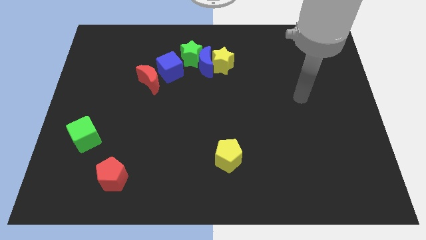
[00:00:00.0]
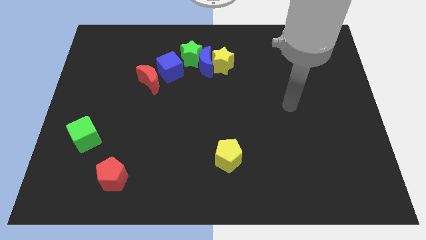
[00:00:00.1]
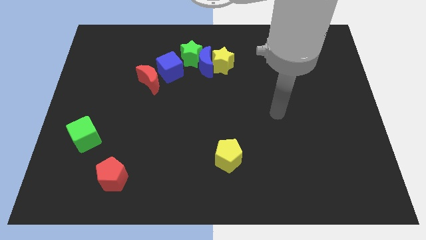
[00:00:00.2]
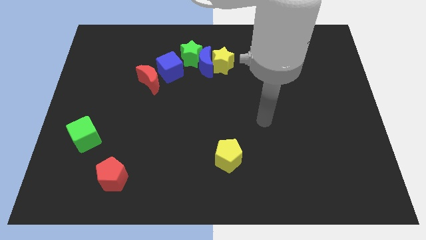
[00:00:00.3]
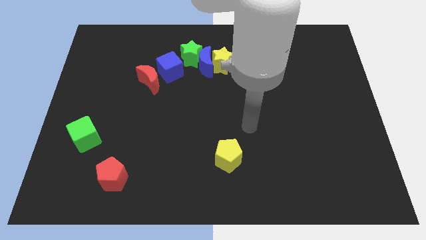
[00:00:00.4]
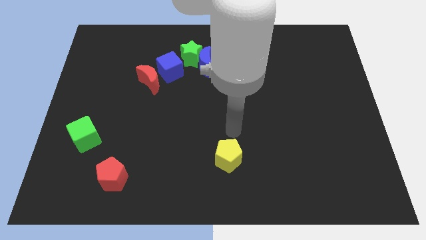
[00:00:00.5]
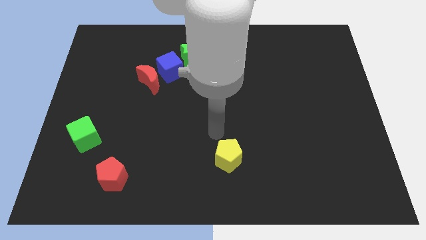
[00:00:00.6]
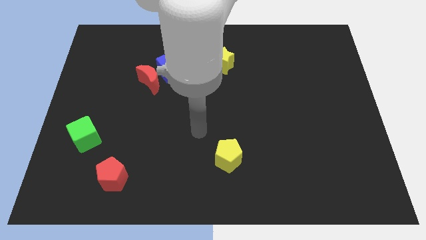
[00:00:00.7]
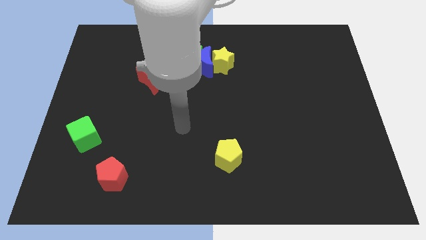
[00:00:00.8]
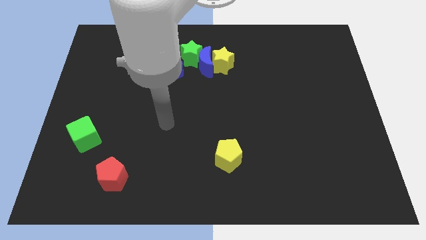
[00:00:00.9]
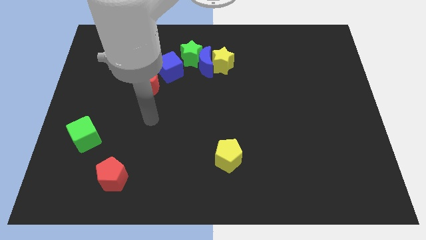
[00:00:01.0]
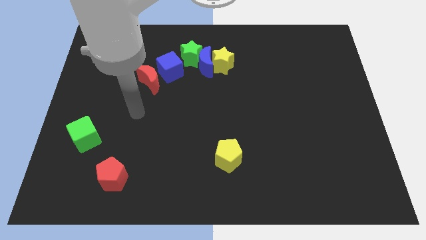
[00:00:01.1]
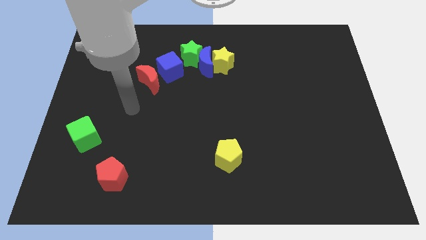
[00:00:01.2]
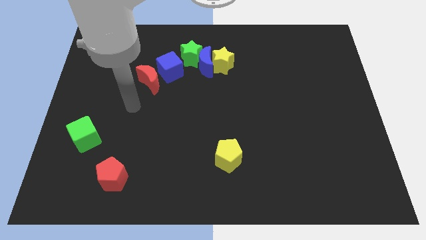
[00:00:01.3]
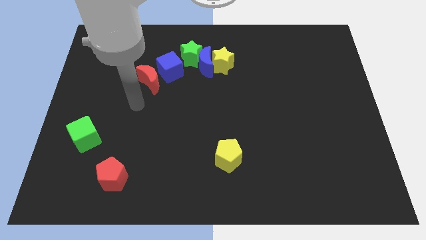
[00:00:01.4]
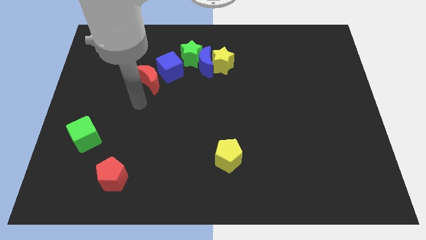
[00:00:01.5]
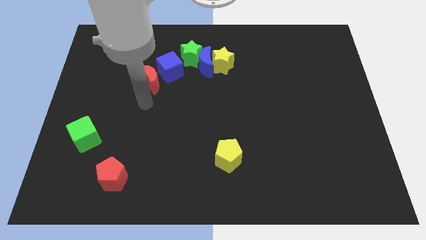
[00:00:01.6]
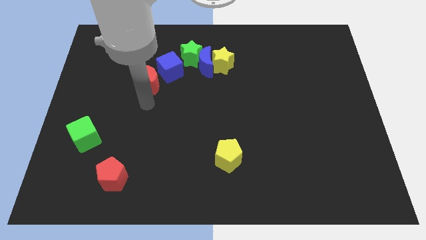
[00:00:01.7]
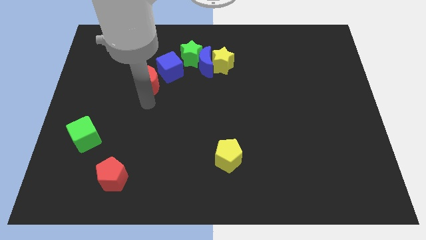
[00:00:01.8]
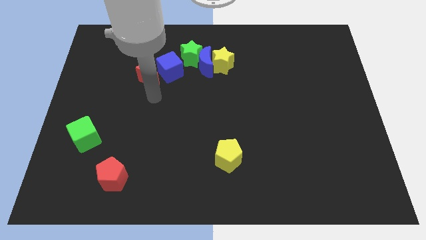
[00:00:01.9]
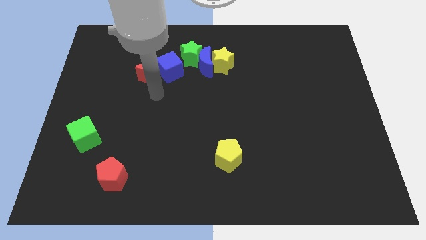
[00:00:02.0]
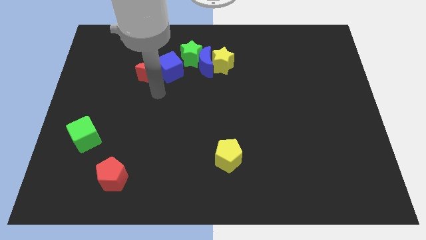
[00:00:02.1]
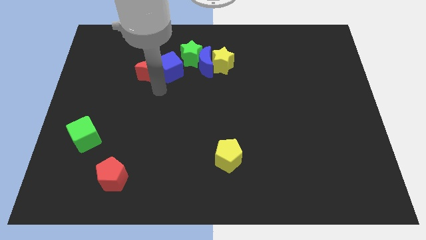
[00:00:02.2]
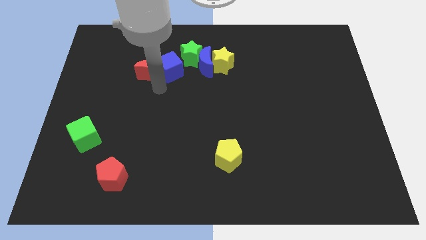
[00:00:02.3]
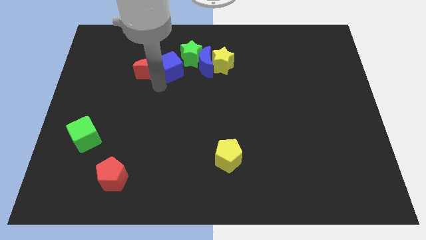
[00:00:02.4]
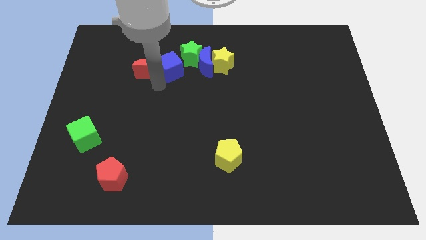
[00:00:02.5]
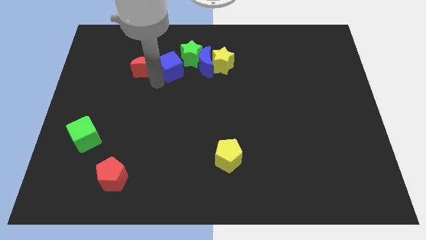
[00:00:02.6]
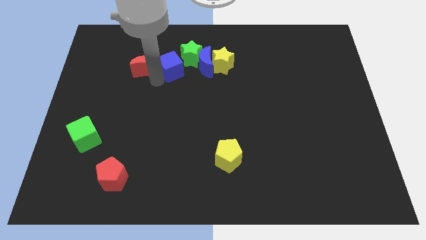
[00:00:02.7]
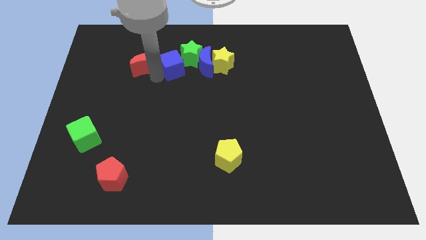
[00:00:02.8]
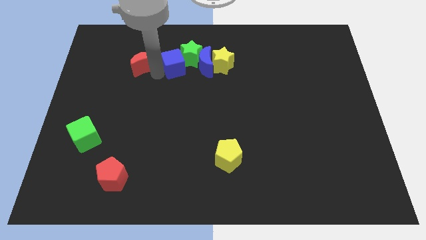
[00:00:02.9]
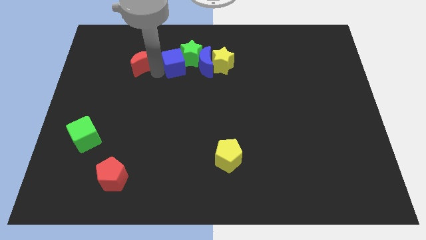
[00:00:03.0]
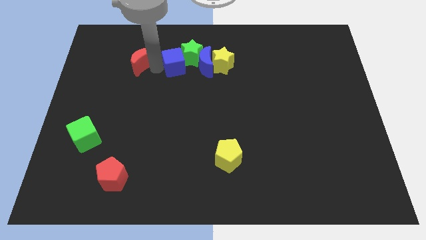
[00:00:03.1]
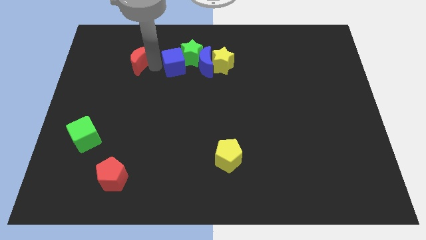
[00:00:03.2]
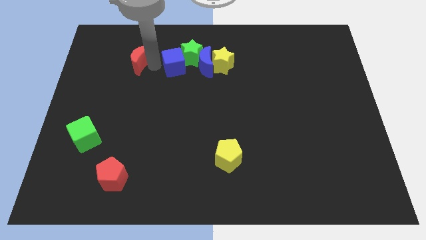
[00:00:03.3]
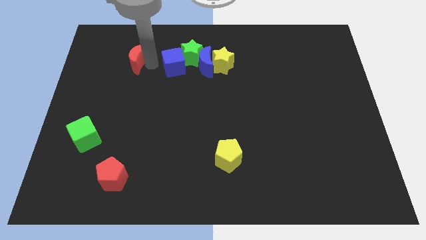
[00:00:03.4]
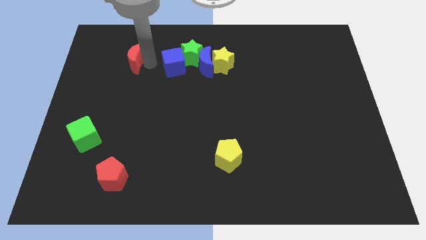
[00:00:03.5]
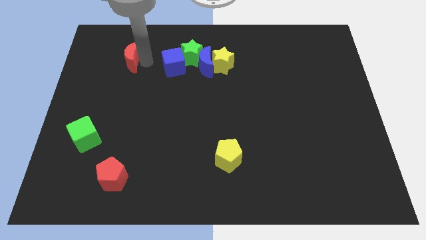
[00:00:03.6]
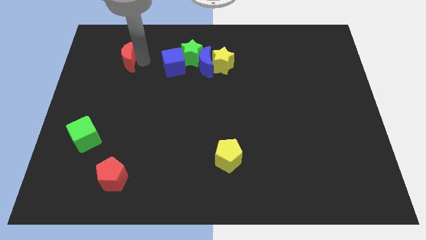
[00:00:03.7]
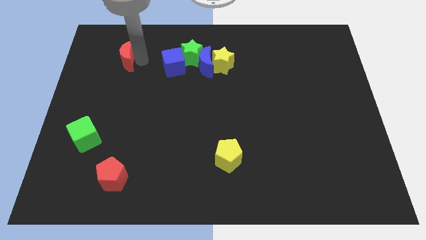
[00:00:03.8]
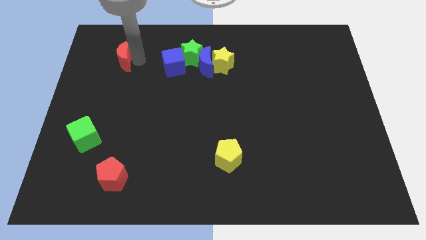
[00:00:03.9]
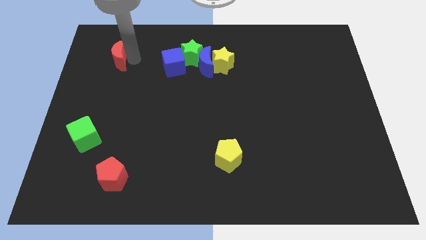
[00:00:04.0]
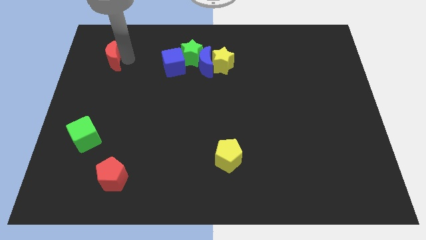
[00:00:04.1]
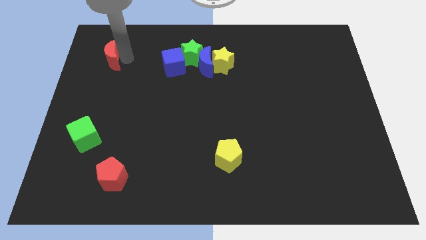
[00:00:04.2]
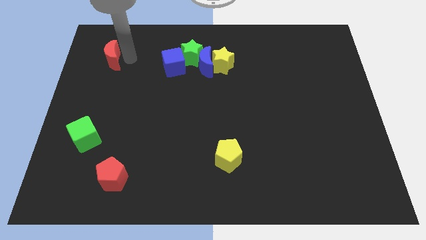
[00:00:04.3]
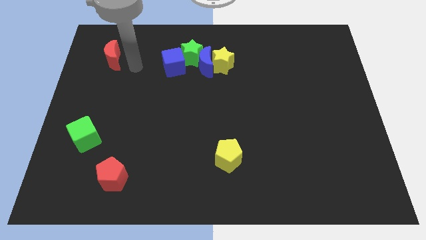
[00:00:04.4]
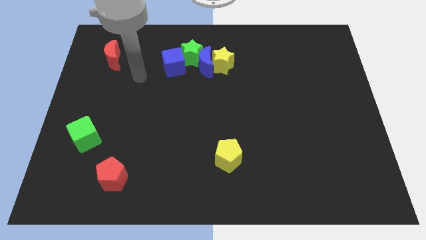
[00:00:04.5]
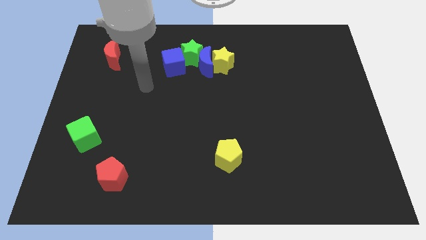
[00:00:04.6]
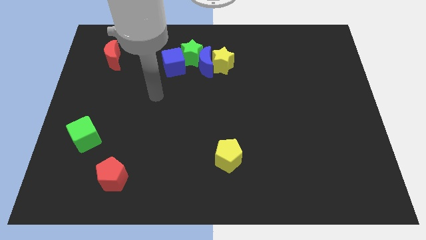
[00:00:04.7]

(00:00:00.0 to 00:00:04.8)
push the red crescent above the green cube

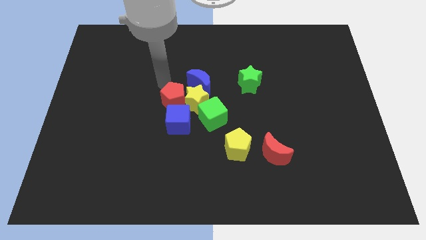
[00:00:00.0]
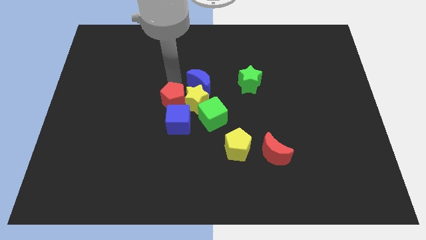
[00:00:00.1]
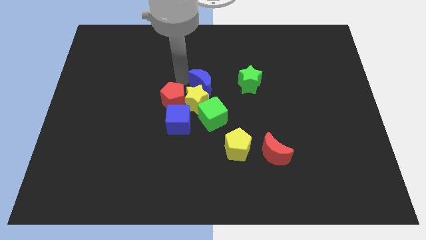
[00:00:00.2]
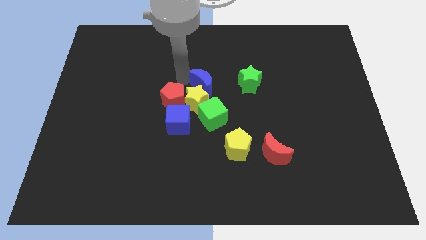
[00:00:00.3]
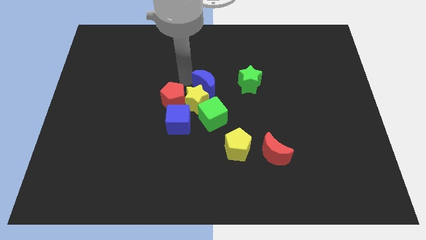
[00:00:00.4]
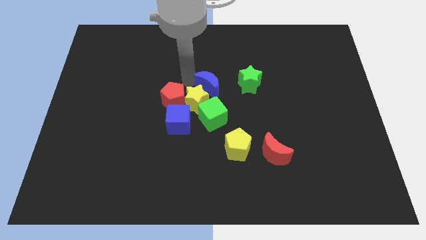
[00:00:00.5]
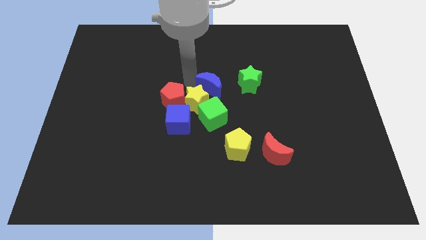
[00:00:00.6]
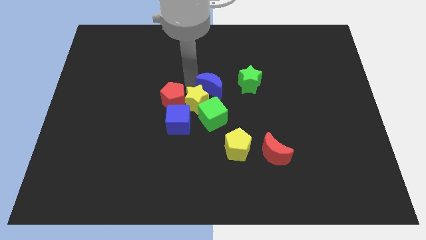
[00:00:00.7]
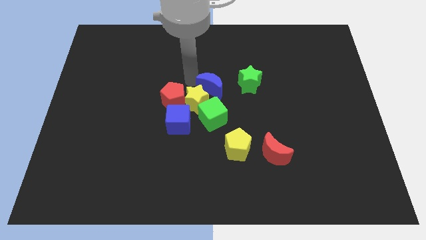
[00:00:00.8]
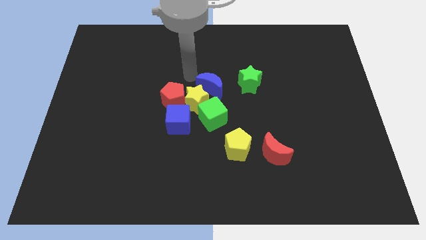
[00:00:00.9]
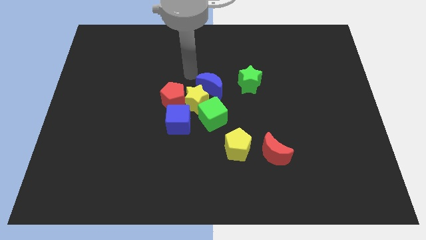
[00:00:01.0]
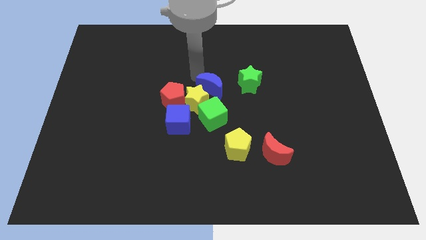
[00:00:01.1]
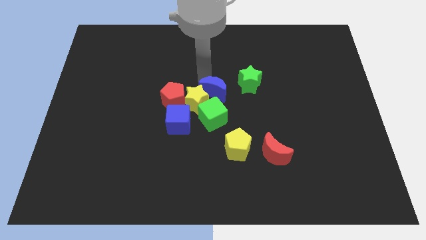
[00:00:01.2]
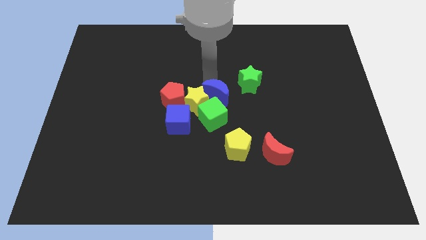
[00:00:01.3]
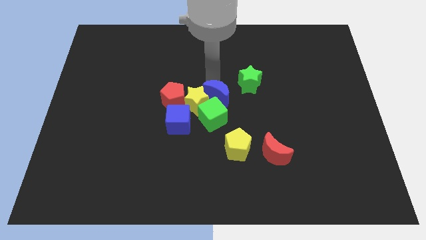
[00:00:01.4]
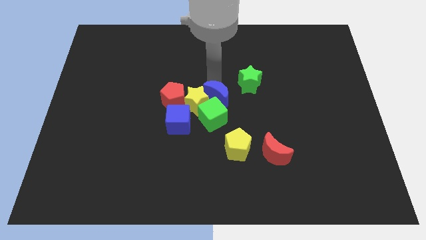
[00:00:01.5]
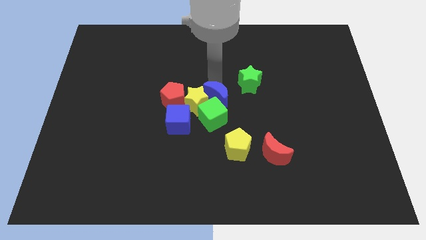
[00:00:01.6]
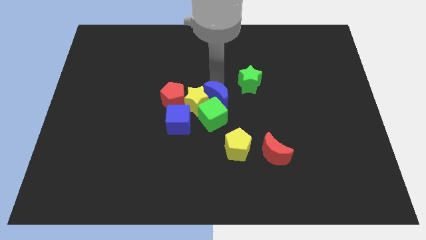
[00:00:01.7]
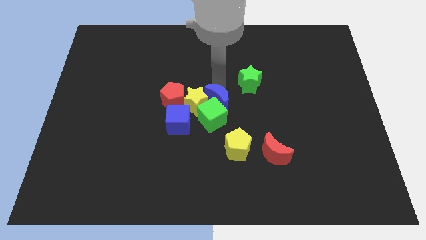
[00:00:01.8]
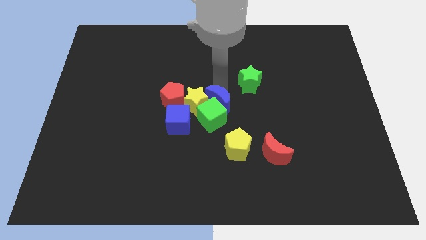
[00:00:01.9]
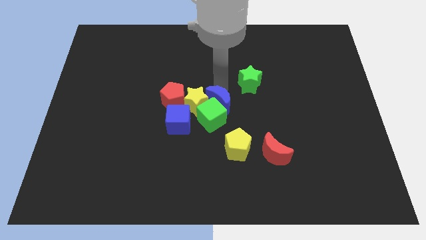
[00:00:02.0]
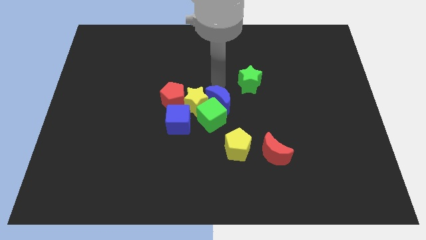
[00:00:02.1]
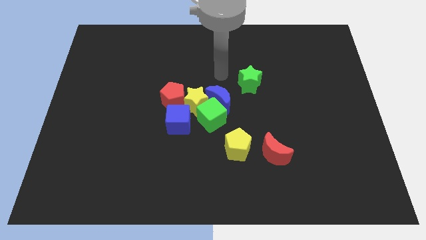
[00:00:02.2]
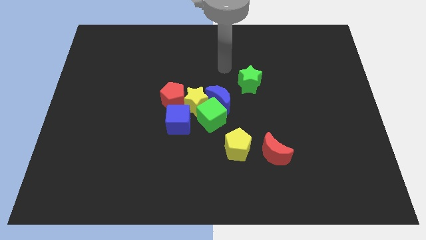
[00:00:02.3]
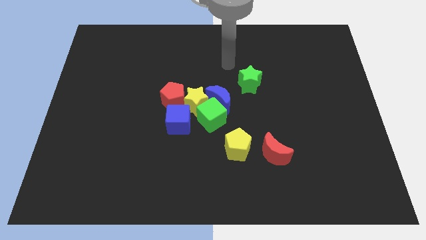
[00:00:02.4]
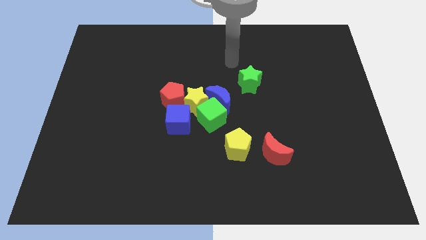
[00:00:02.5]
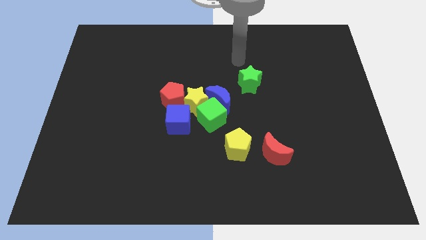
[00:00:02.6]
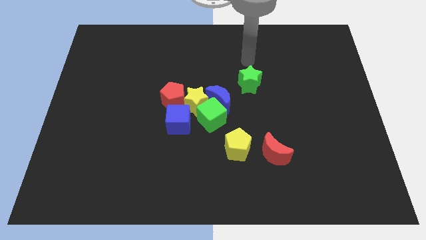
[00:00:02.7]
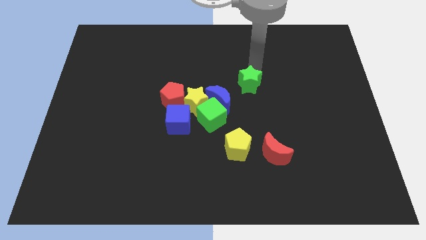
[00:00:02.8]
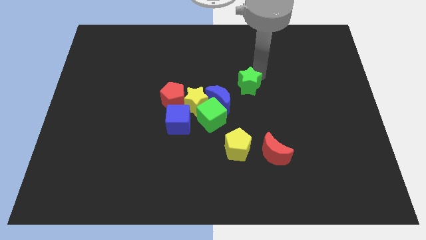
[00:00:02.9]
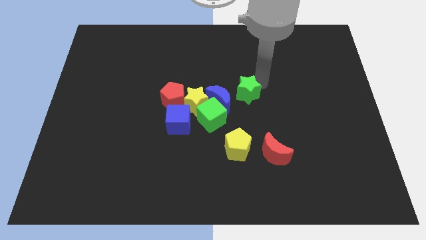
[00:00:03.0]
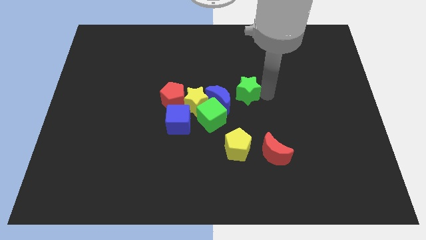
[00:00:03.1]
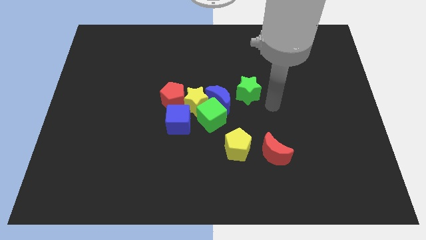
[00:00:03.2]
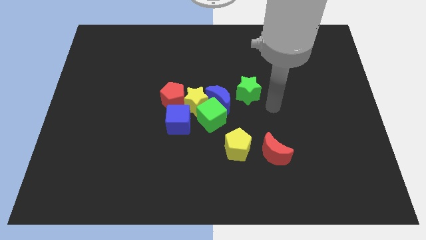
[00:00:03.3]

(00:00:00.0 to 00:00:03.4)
slightly move down the green star

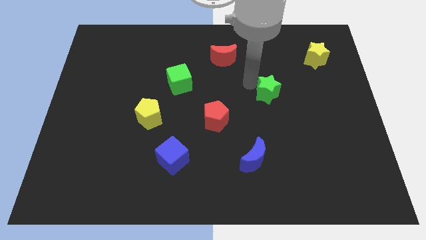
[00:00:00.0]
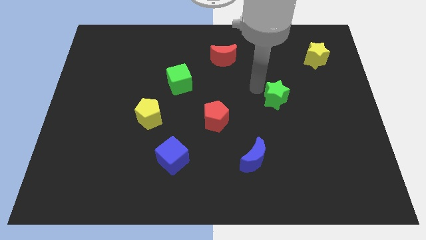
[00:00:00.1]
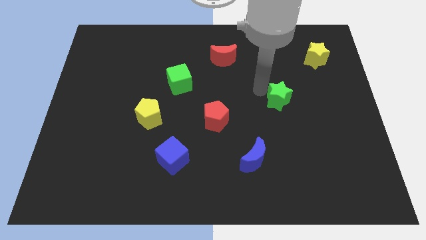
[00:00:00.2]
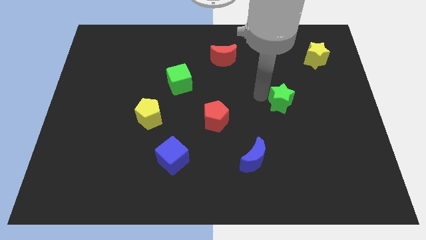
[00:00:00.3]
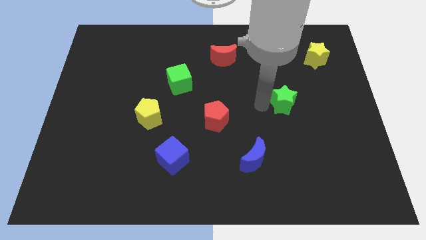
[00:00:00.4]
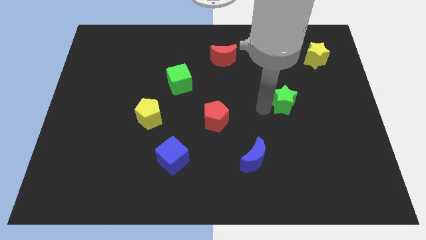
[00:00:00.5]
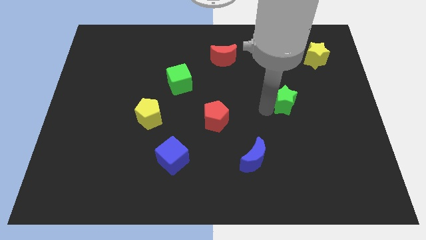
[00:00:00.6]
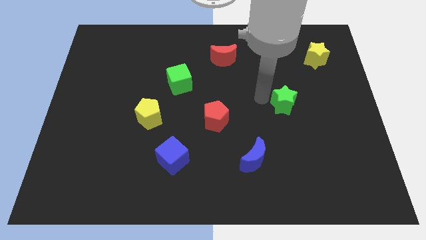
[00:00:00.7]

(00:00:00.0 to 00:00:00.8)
place green star in between yellow star and blue moon
